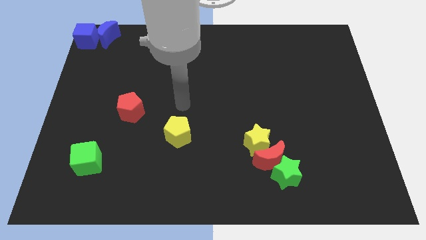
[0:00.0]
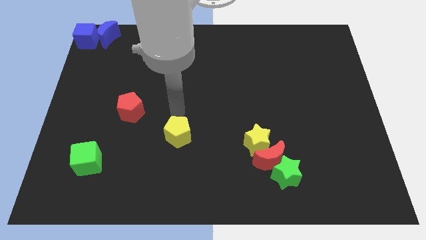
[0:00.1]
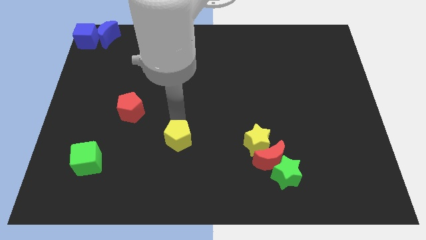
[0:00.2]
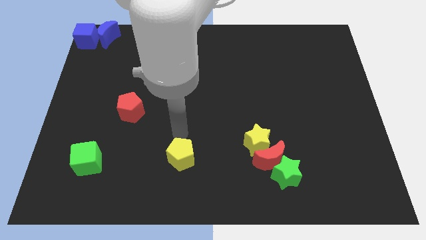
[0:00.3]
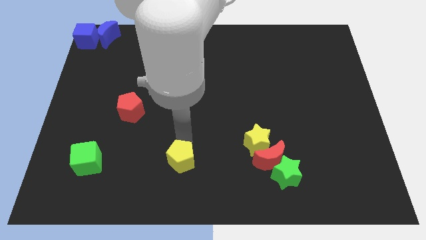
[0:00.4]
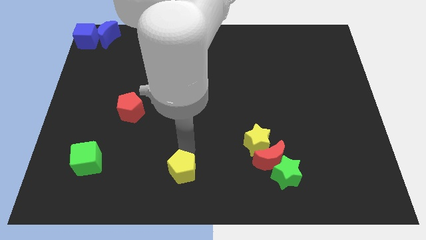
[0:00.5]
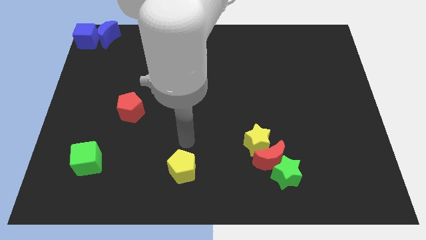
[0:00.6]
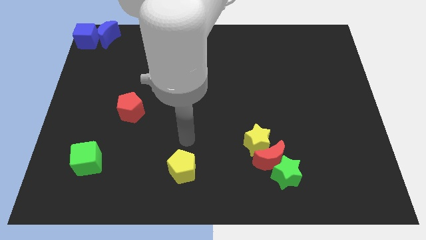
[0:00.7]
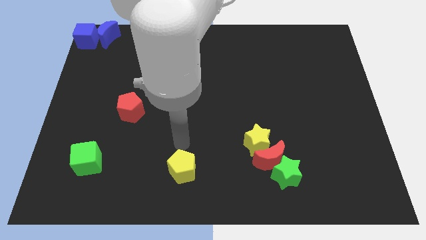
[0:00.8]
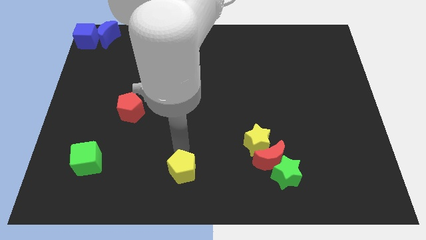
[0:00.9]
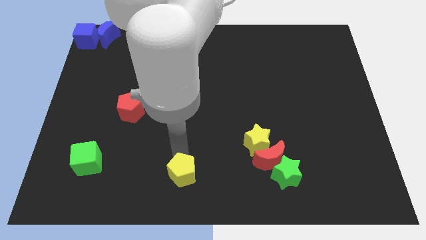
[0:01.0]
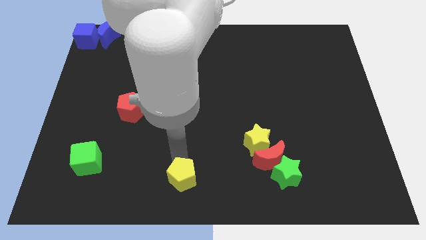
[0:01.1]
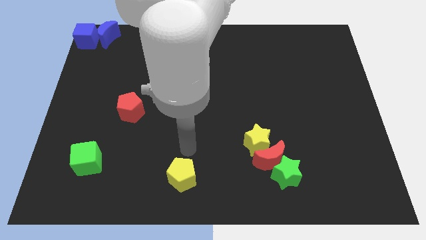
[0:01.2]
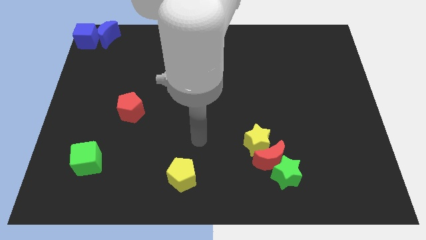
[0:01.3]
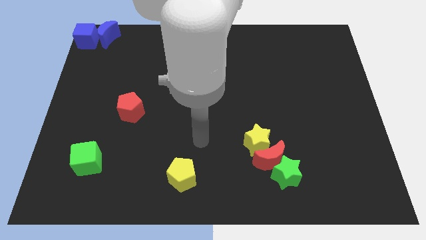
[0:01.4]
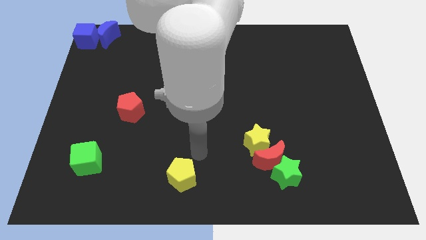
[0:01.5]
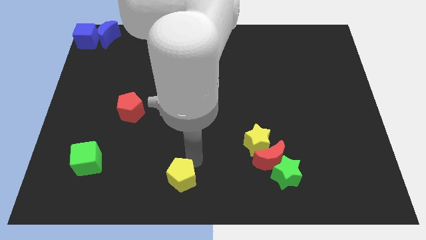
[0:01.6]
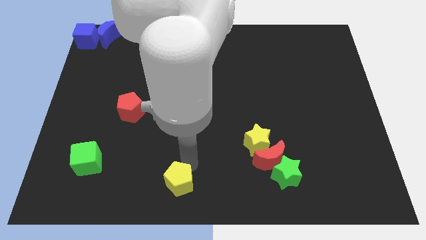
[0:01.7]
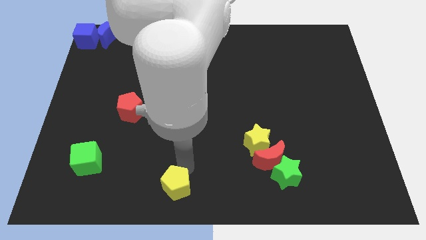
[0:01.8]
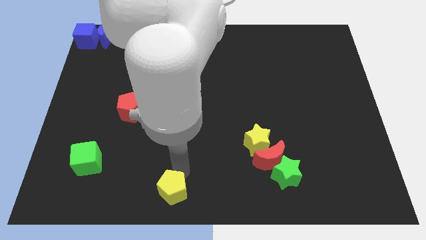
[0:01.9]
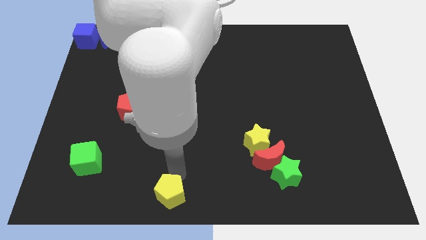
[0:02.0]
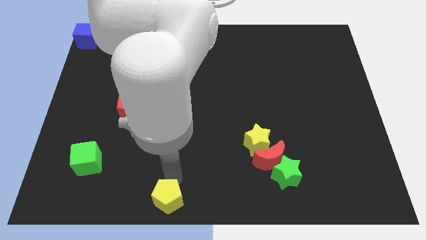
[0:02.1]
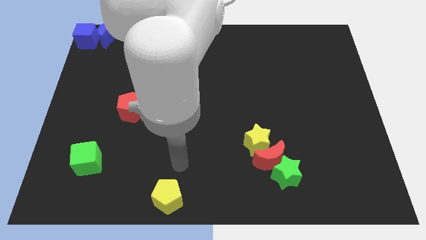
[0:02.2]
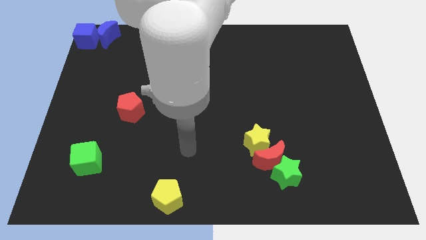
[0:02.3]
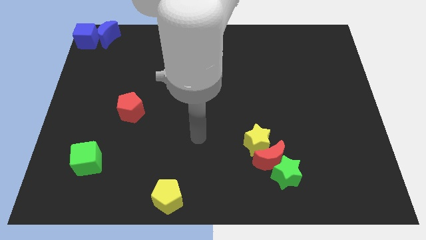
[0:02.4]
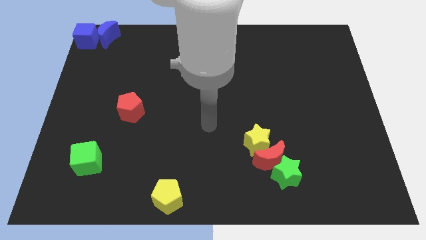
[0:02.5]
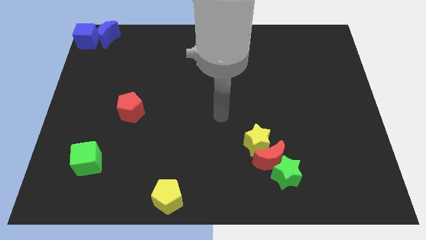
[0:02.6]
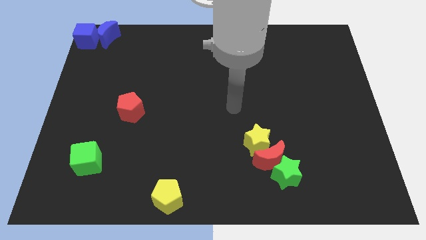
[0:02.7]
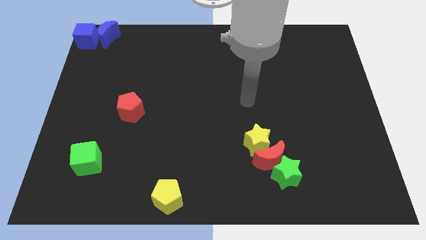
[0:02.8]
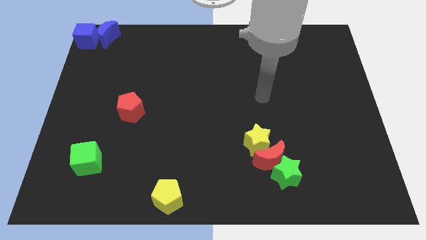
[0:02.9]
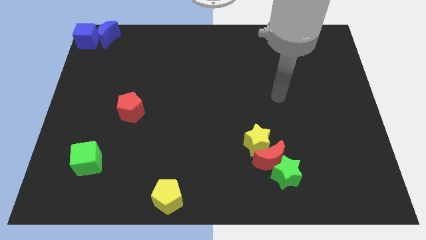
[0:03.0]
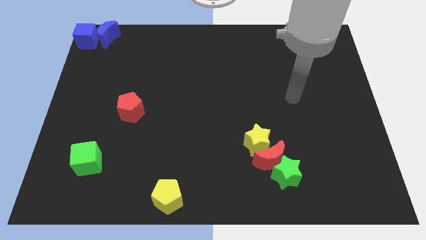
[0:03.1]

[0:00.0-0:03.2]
slide the yellow pentagon diagonally bottom right to the green cube

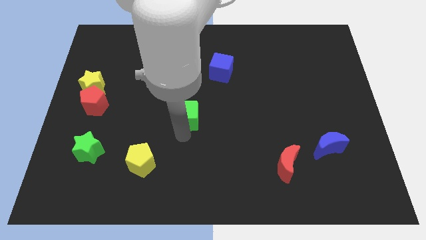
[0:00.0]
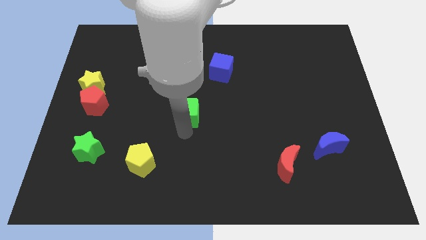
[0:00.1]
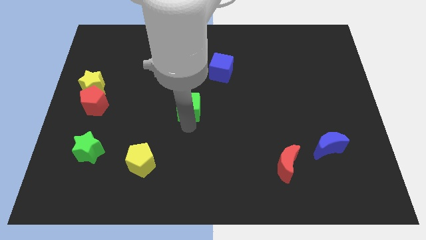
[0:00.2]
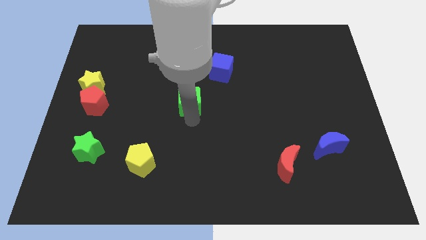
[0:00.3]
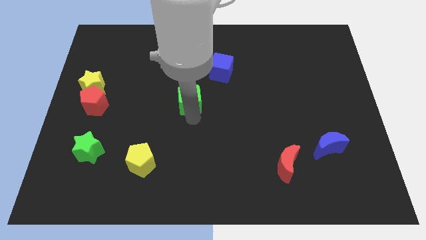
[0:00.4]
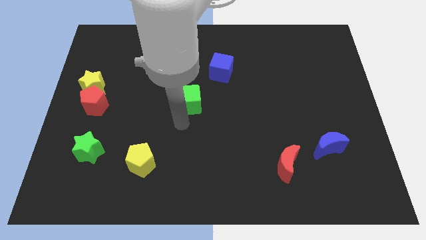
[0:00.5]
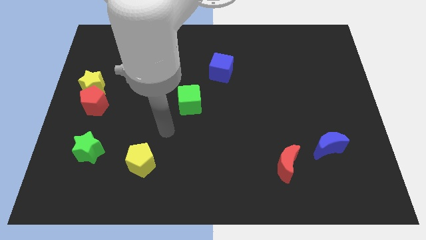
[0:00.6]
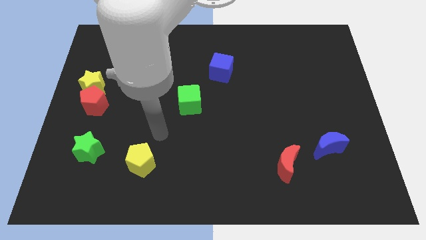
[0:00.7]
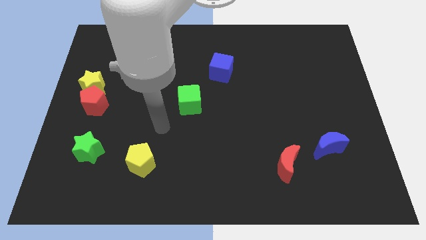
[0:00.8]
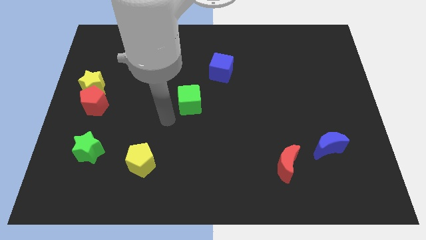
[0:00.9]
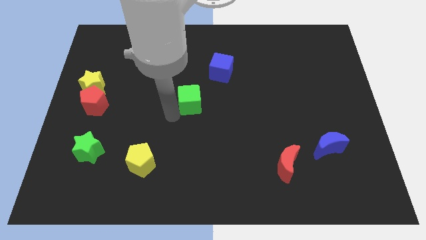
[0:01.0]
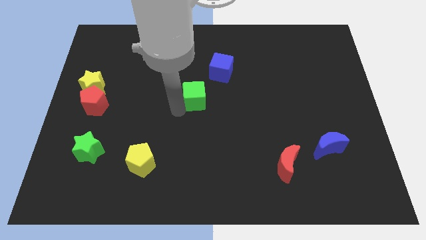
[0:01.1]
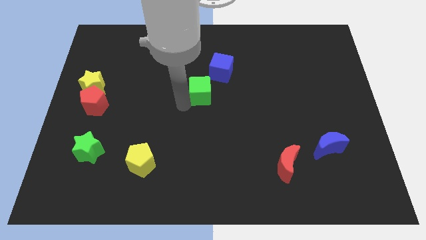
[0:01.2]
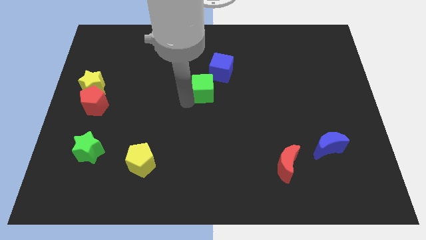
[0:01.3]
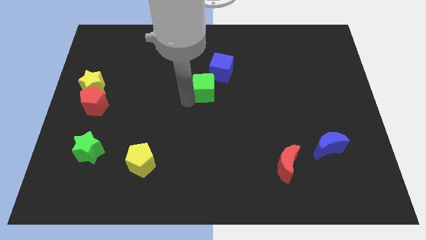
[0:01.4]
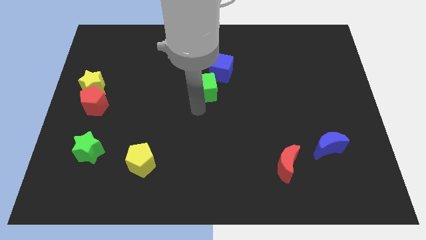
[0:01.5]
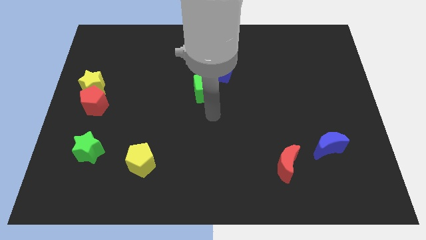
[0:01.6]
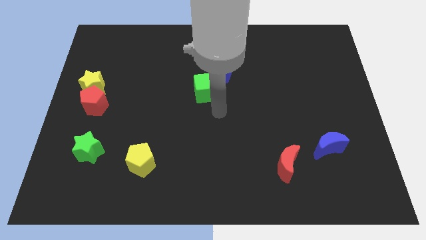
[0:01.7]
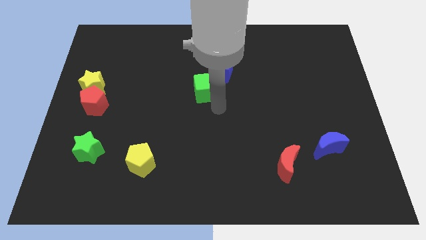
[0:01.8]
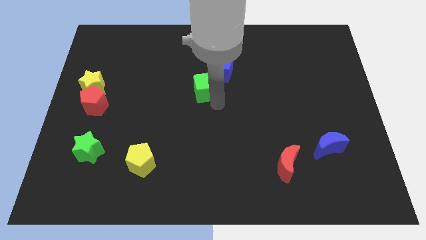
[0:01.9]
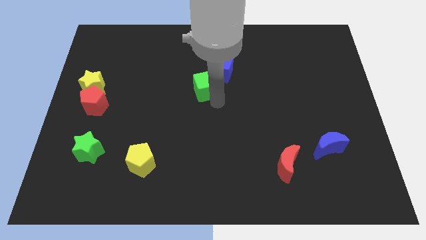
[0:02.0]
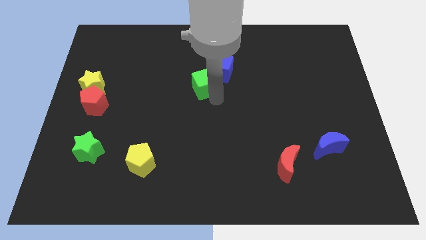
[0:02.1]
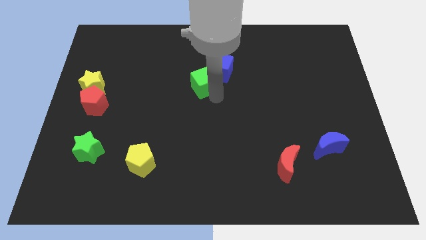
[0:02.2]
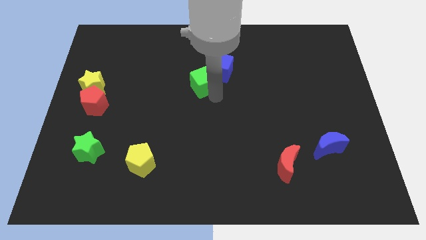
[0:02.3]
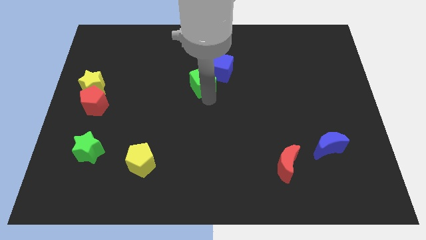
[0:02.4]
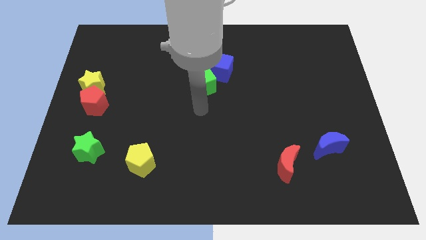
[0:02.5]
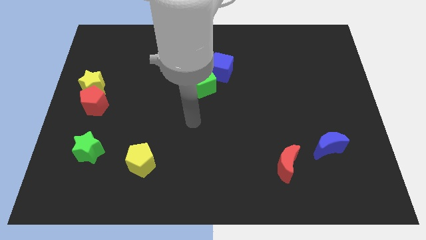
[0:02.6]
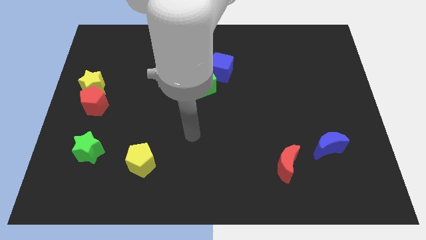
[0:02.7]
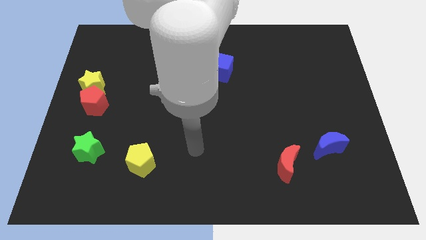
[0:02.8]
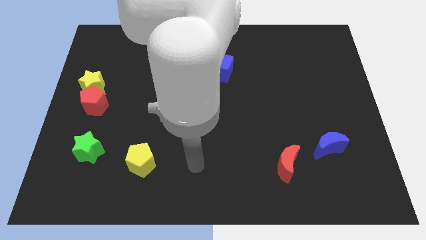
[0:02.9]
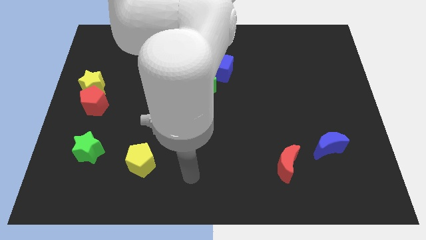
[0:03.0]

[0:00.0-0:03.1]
push green cube in to blue cube

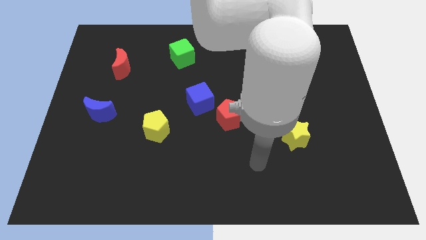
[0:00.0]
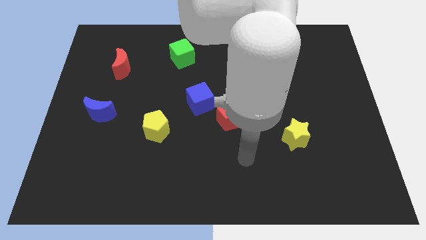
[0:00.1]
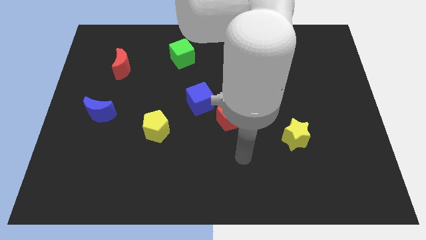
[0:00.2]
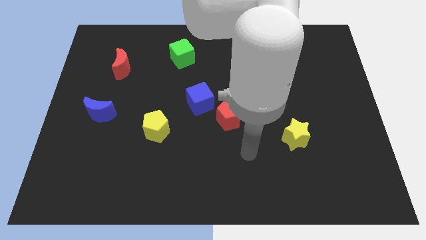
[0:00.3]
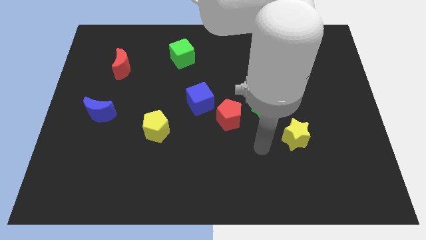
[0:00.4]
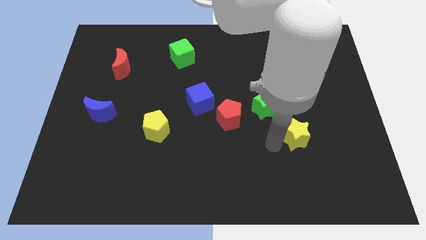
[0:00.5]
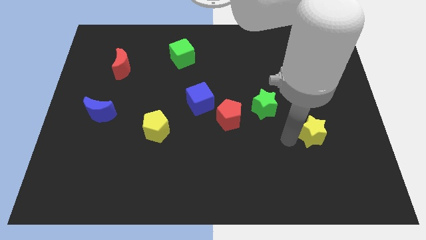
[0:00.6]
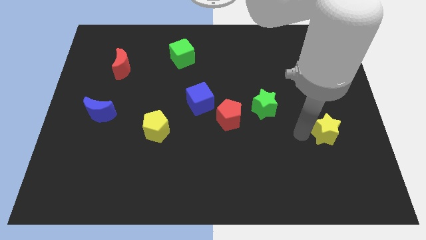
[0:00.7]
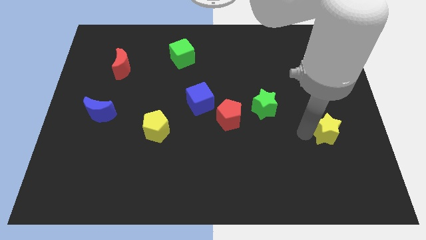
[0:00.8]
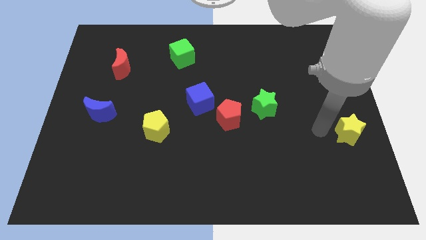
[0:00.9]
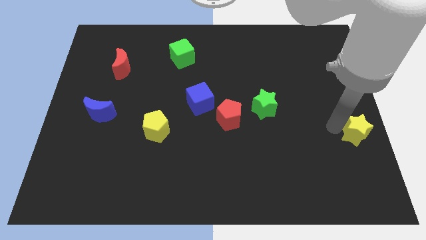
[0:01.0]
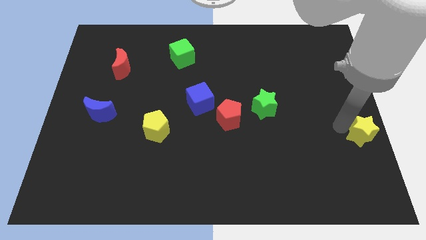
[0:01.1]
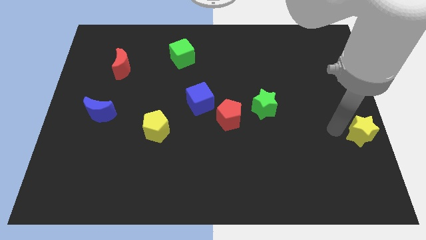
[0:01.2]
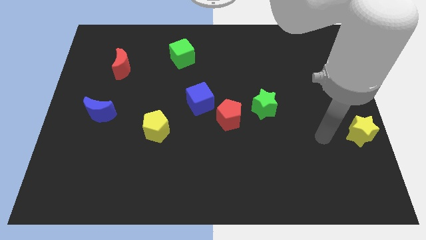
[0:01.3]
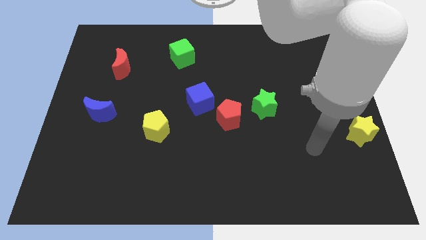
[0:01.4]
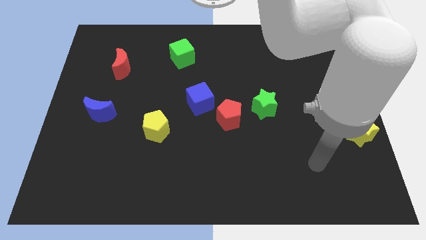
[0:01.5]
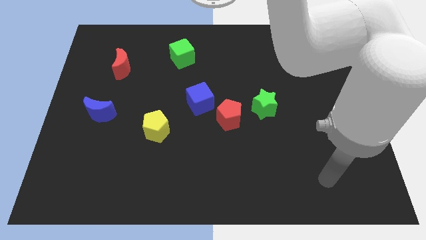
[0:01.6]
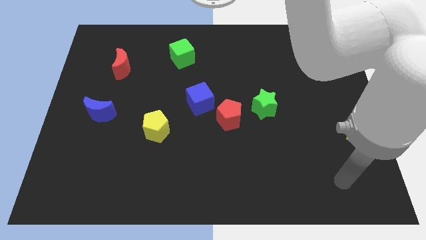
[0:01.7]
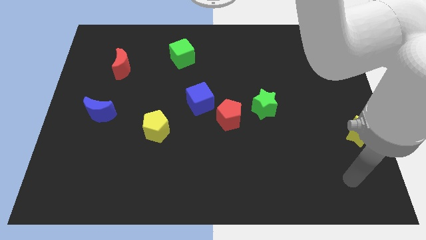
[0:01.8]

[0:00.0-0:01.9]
place the yellow star at the center right

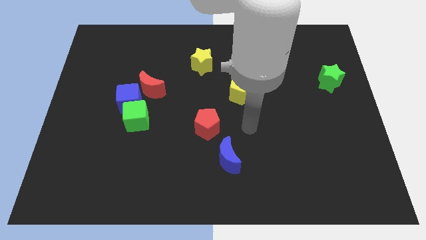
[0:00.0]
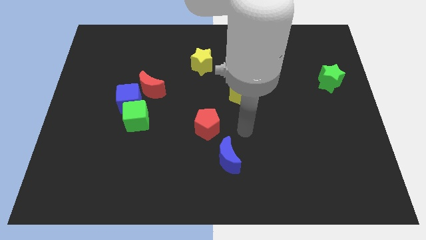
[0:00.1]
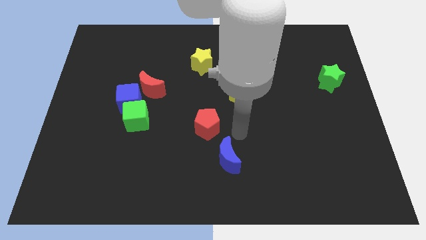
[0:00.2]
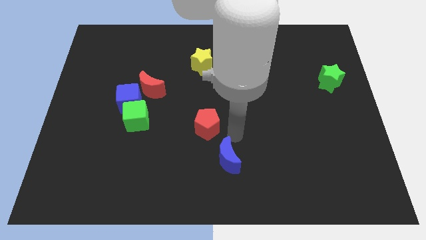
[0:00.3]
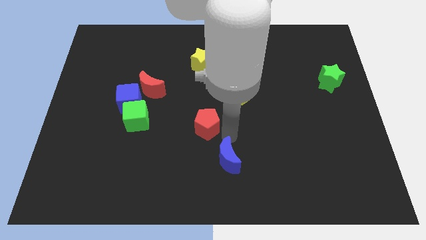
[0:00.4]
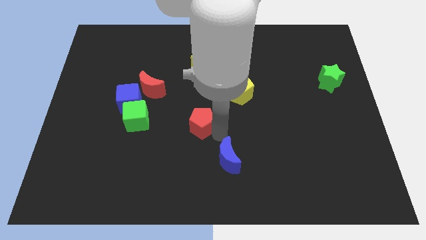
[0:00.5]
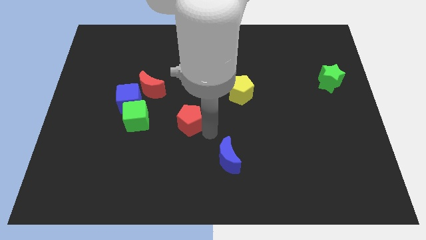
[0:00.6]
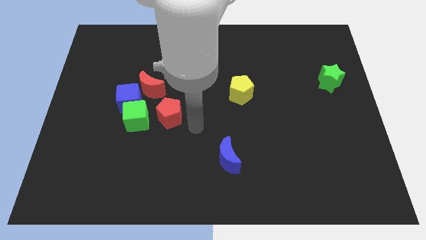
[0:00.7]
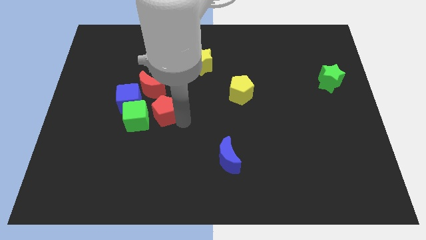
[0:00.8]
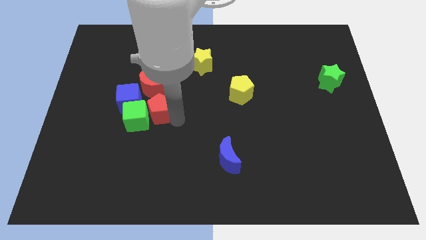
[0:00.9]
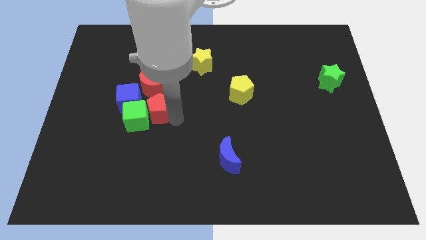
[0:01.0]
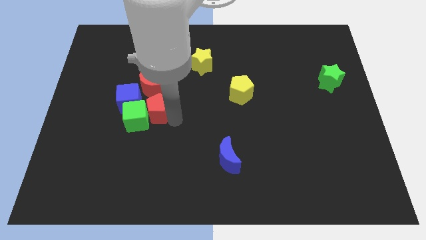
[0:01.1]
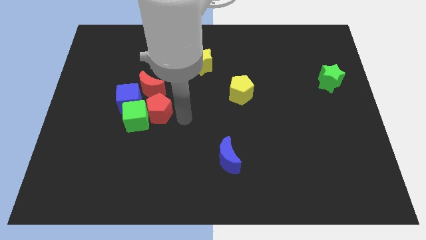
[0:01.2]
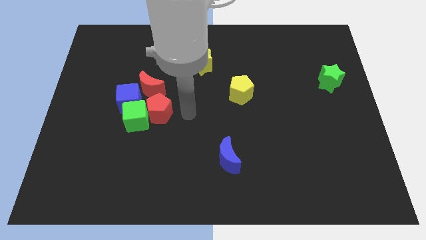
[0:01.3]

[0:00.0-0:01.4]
put the red pentagon below the red crescent
